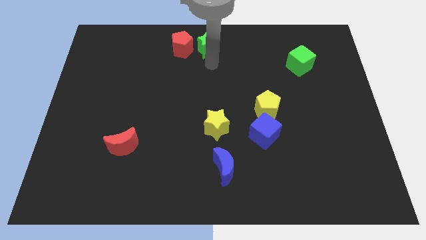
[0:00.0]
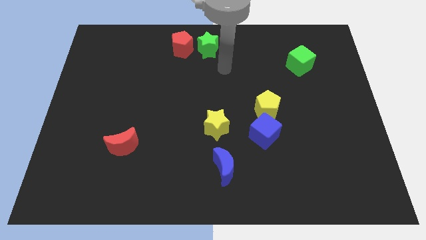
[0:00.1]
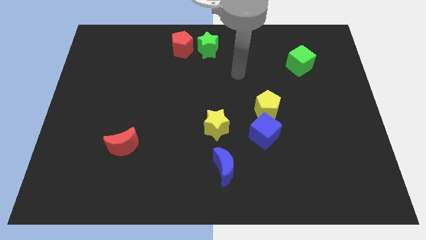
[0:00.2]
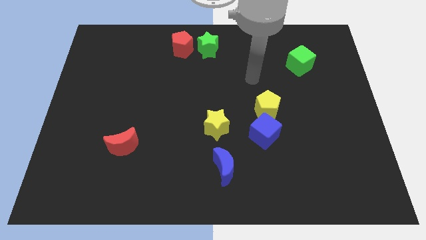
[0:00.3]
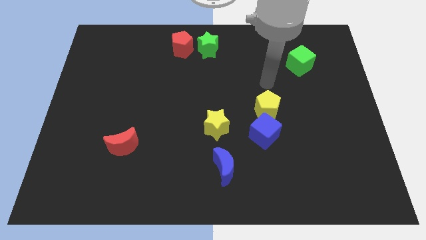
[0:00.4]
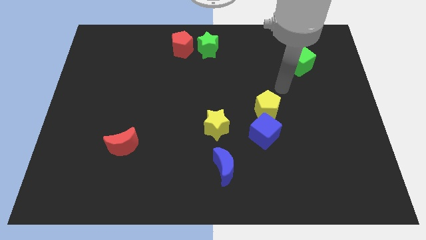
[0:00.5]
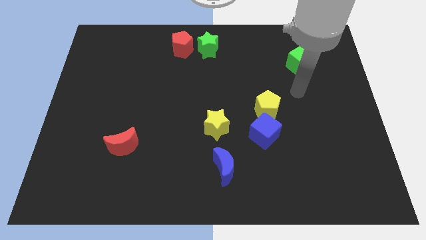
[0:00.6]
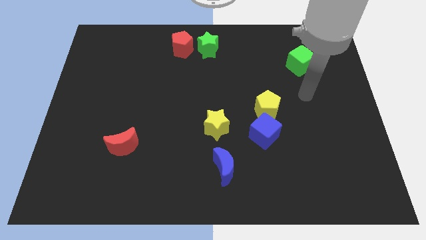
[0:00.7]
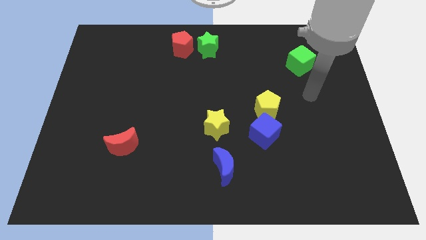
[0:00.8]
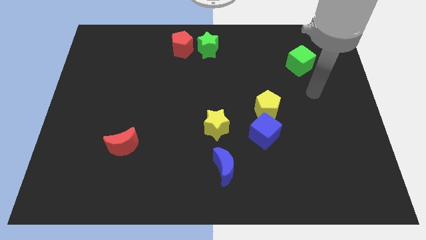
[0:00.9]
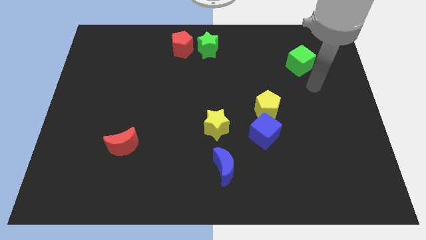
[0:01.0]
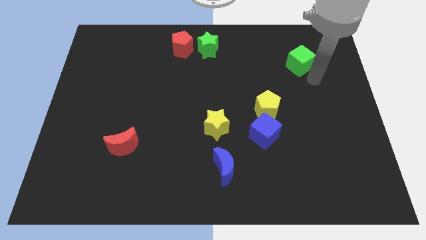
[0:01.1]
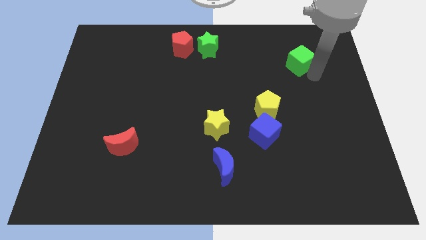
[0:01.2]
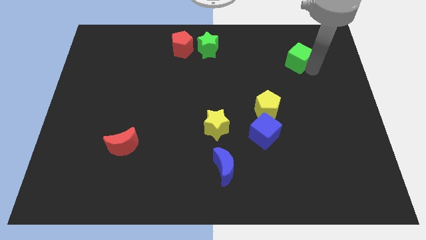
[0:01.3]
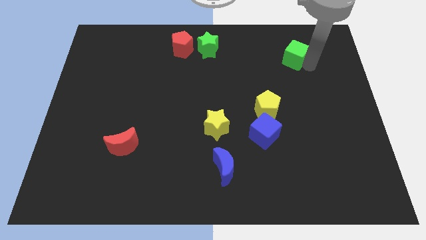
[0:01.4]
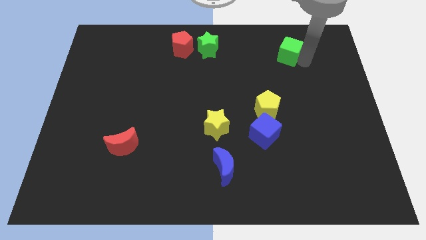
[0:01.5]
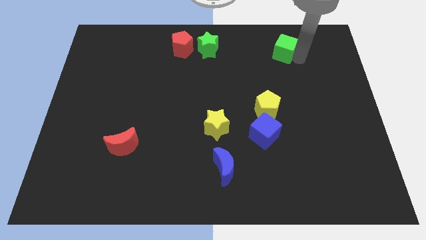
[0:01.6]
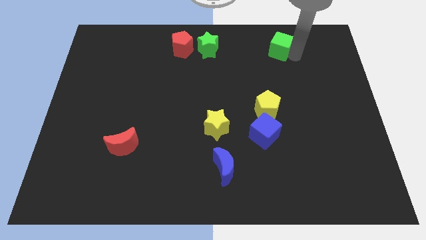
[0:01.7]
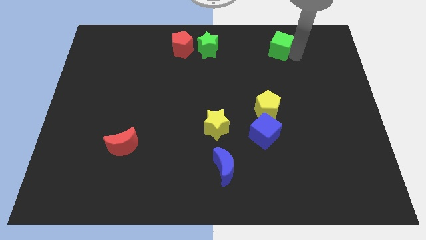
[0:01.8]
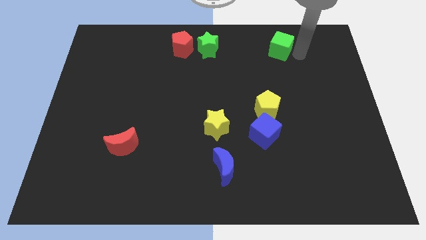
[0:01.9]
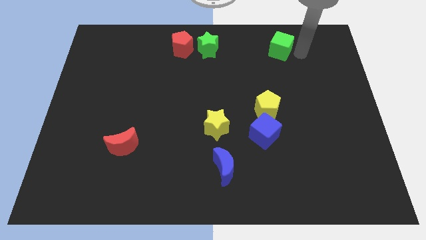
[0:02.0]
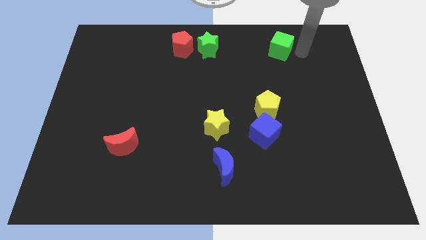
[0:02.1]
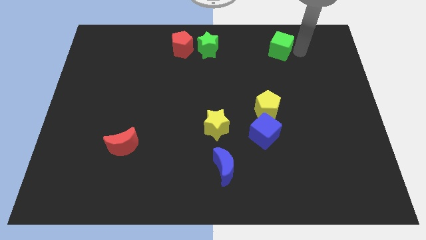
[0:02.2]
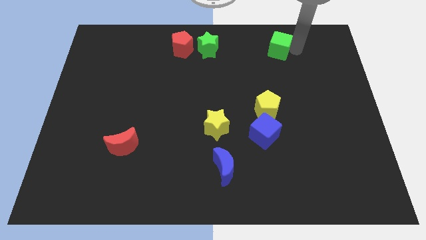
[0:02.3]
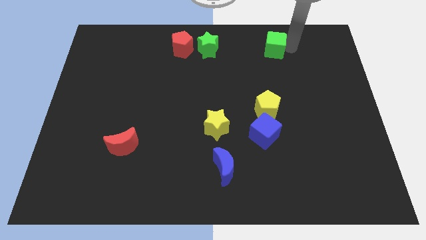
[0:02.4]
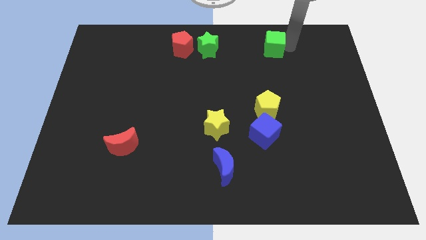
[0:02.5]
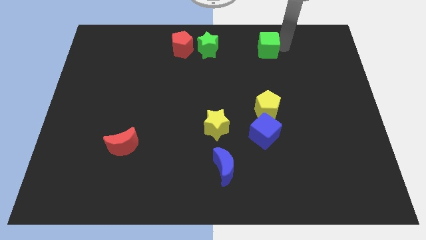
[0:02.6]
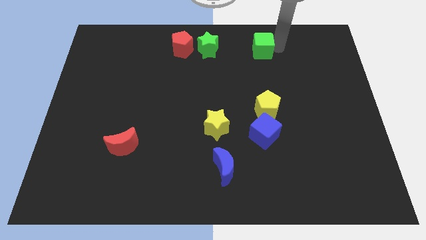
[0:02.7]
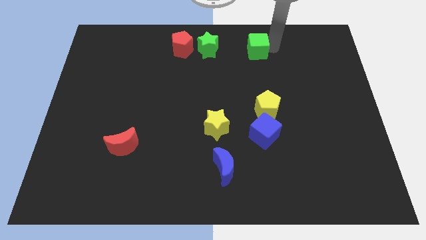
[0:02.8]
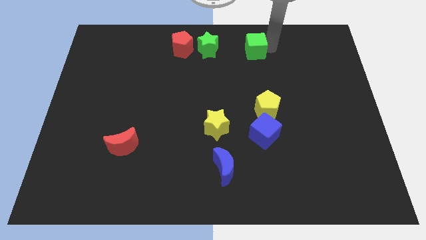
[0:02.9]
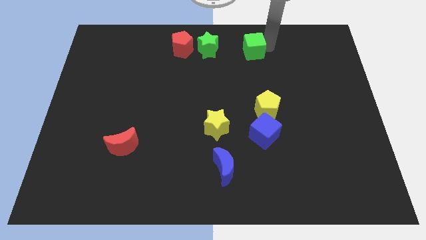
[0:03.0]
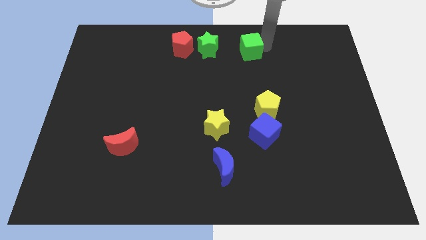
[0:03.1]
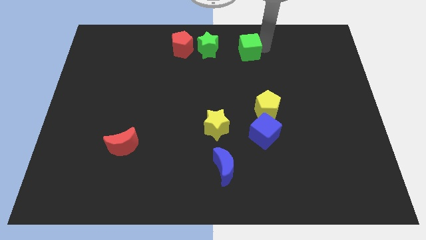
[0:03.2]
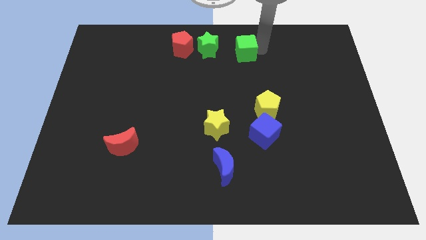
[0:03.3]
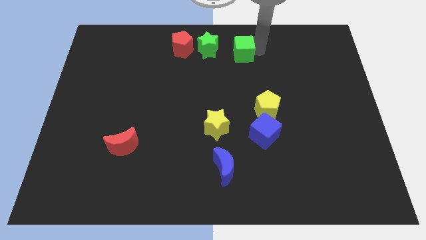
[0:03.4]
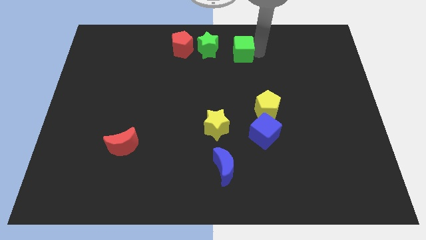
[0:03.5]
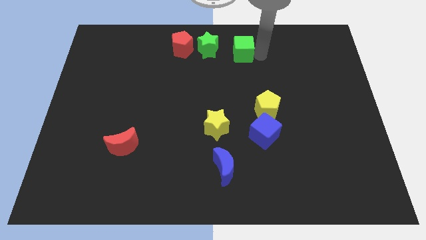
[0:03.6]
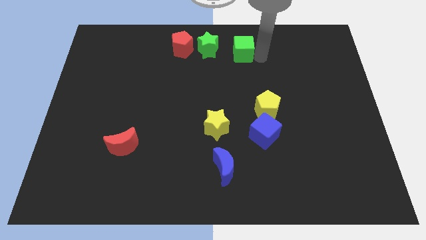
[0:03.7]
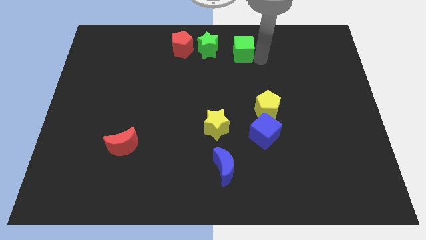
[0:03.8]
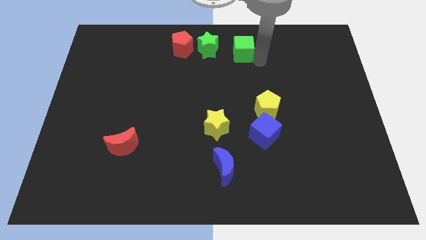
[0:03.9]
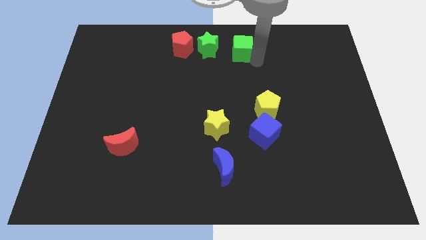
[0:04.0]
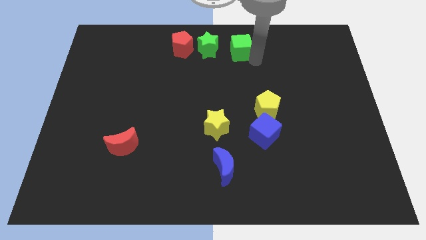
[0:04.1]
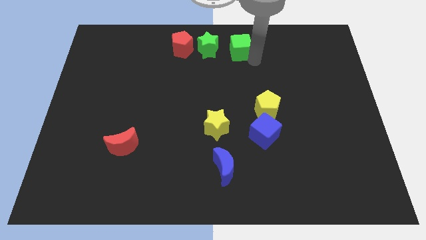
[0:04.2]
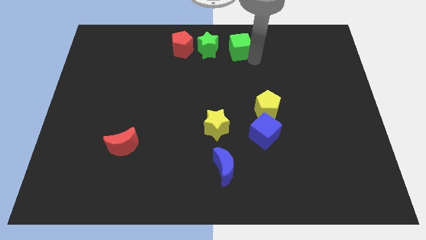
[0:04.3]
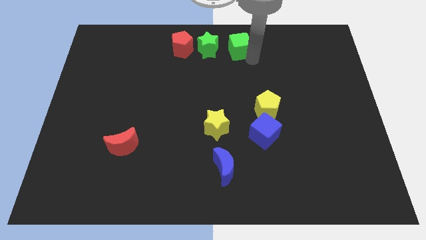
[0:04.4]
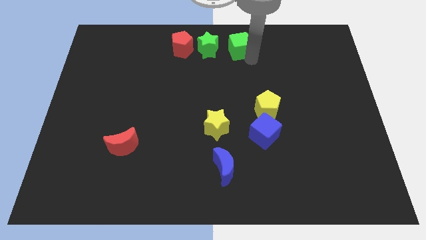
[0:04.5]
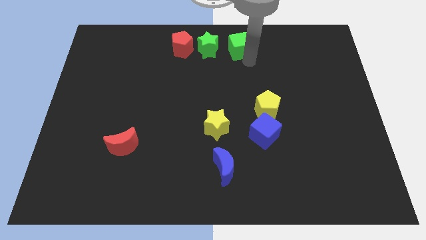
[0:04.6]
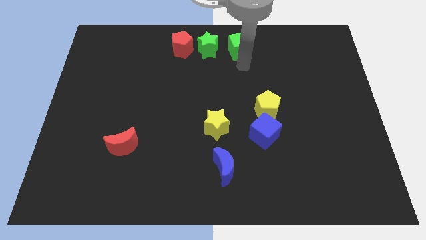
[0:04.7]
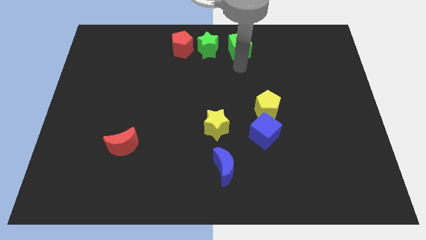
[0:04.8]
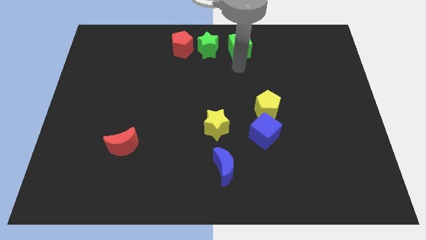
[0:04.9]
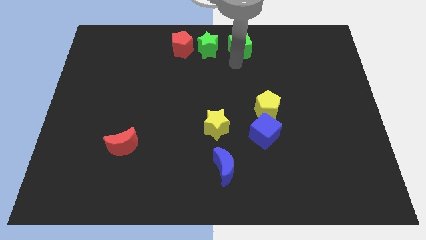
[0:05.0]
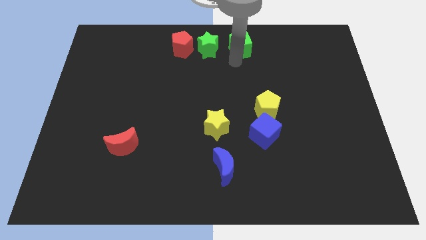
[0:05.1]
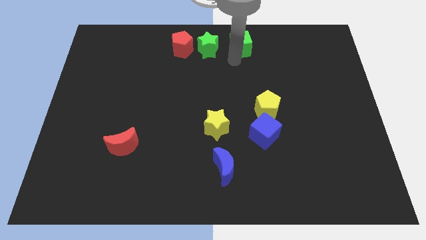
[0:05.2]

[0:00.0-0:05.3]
place the green cube above the yellow pentagon

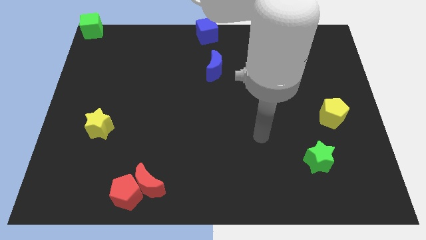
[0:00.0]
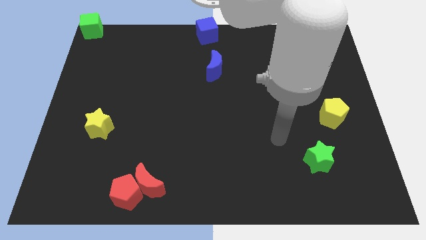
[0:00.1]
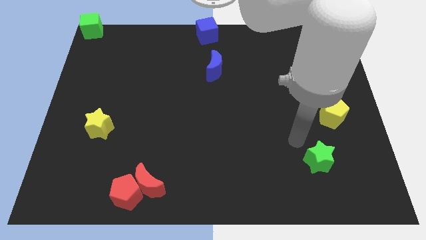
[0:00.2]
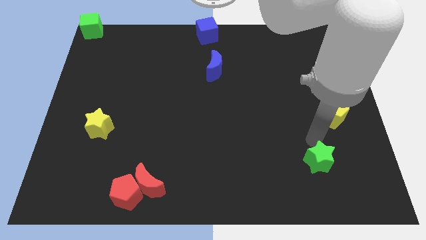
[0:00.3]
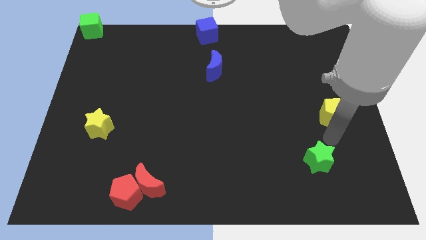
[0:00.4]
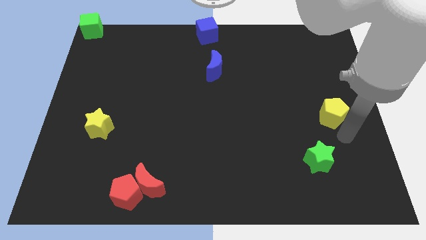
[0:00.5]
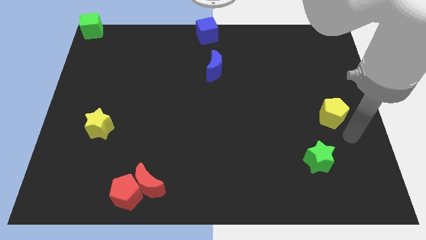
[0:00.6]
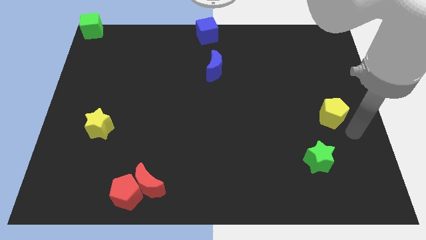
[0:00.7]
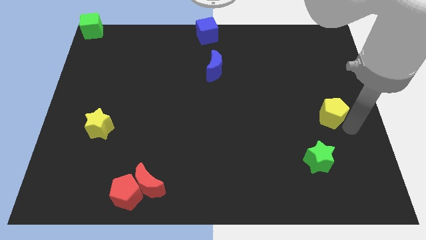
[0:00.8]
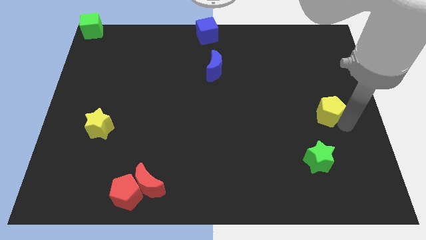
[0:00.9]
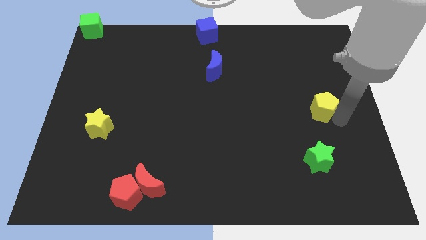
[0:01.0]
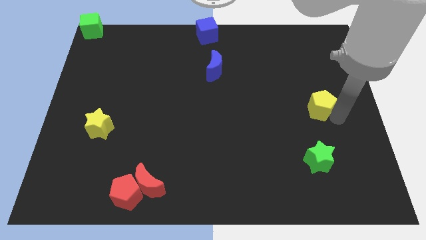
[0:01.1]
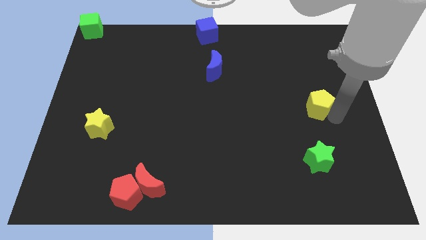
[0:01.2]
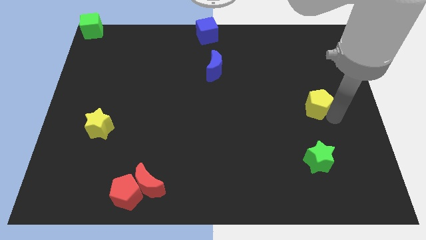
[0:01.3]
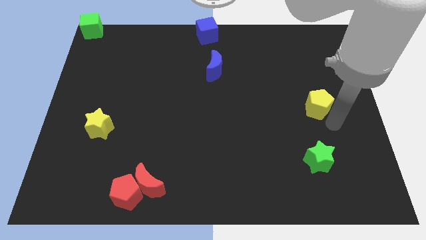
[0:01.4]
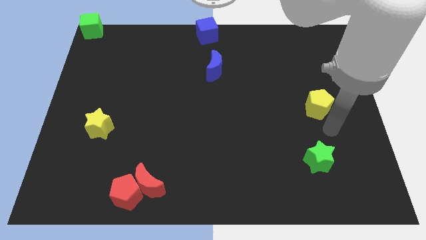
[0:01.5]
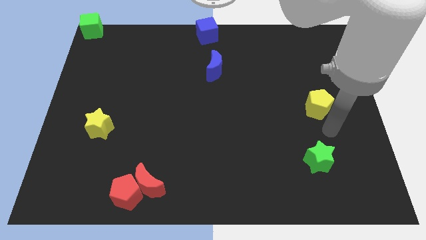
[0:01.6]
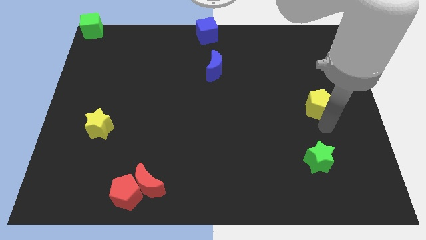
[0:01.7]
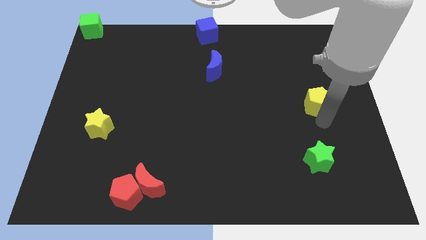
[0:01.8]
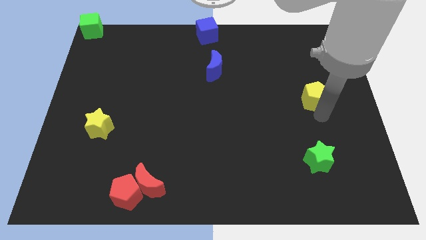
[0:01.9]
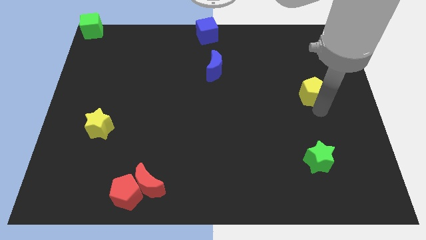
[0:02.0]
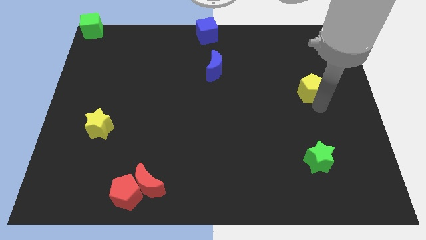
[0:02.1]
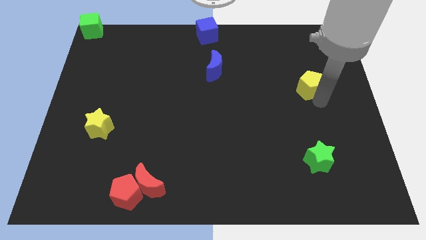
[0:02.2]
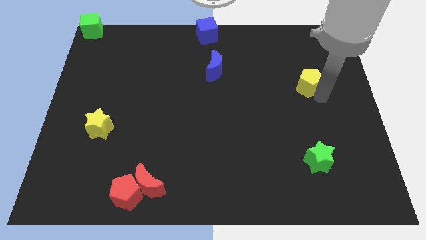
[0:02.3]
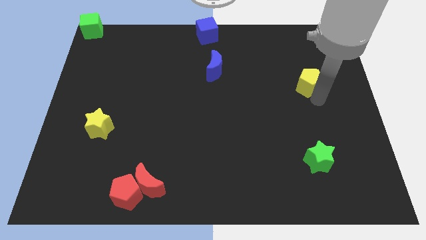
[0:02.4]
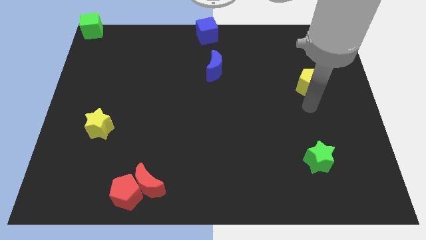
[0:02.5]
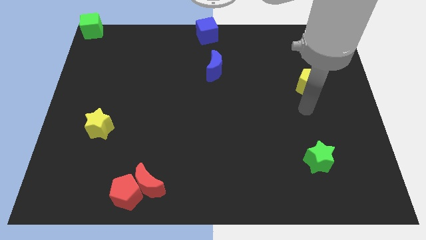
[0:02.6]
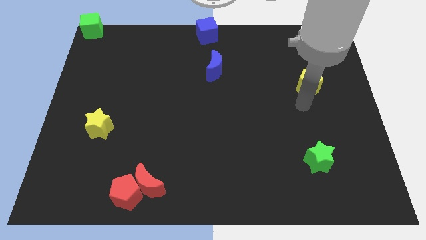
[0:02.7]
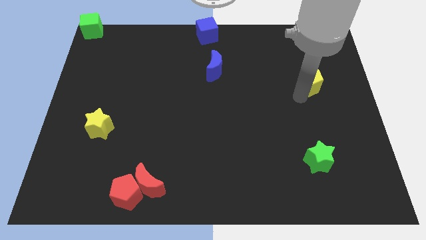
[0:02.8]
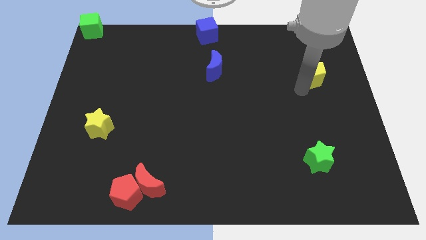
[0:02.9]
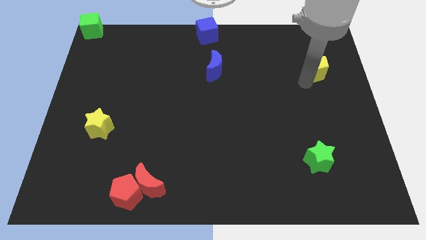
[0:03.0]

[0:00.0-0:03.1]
place yellow pentagon vertically above green star

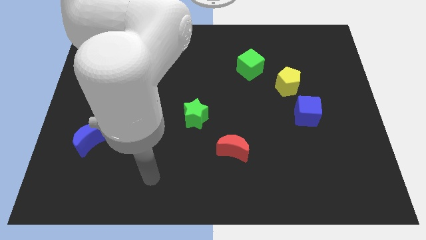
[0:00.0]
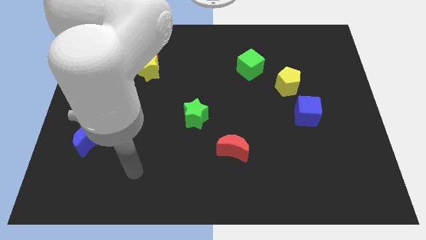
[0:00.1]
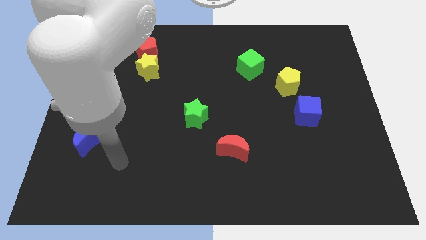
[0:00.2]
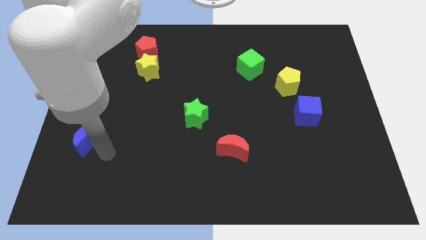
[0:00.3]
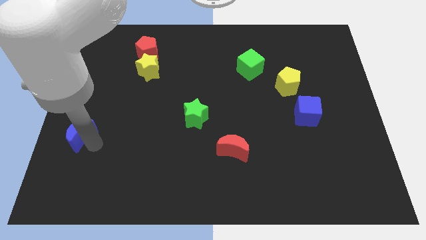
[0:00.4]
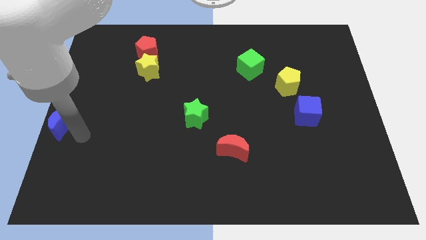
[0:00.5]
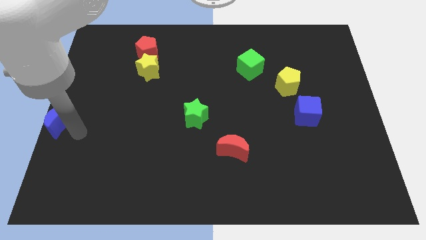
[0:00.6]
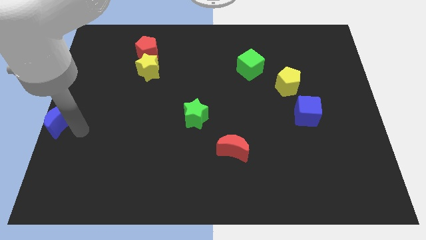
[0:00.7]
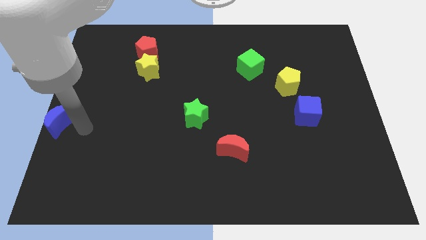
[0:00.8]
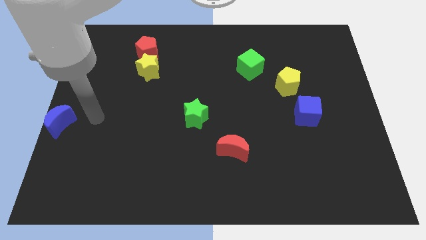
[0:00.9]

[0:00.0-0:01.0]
push the blue crescent to the left of the board
